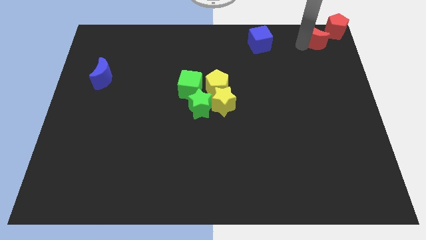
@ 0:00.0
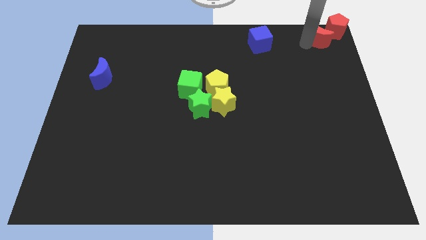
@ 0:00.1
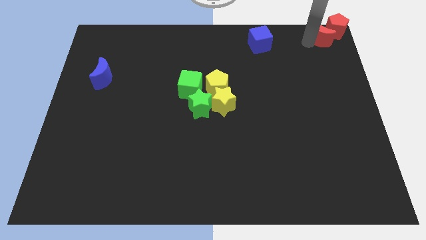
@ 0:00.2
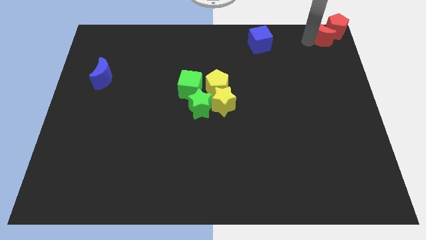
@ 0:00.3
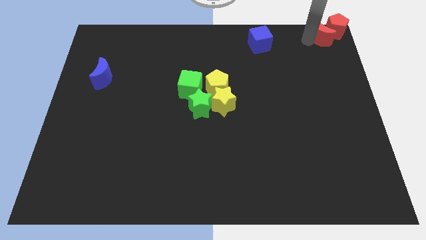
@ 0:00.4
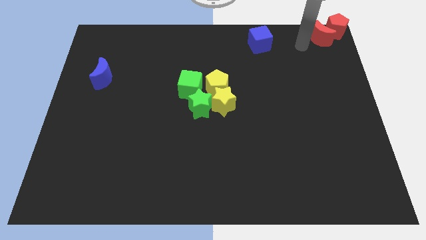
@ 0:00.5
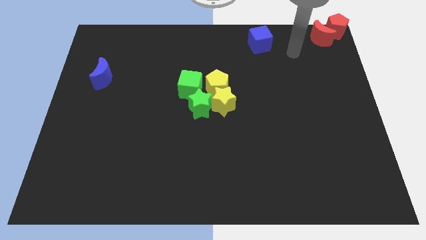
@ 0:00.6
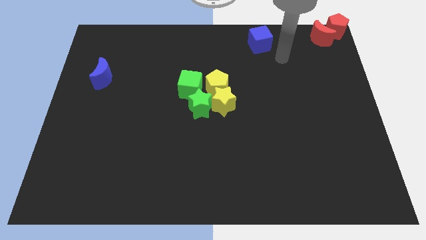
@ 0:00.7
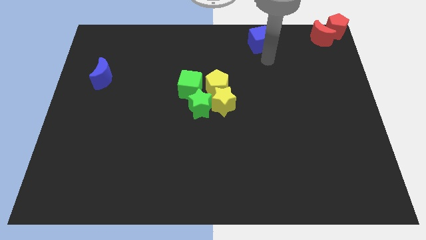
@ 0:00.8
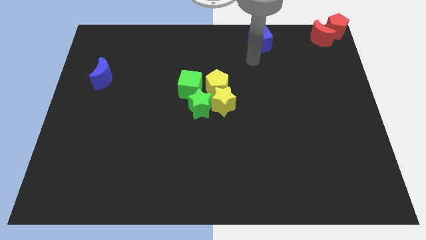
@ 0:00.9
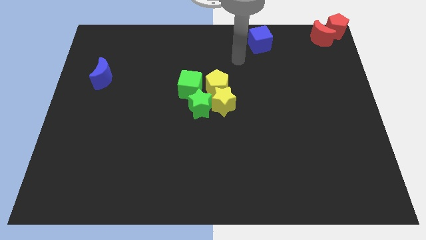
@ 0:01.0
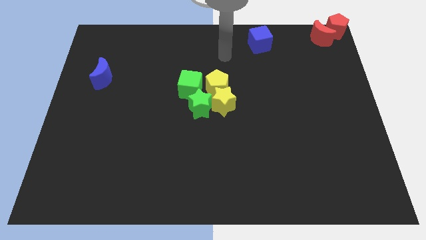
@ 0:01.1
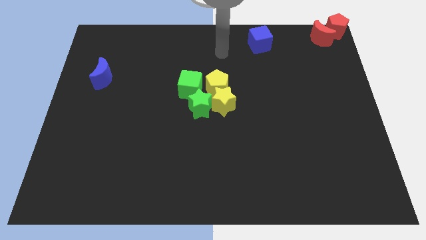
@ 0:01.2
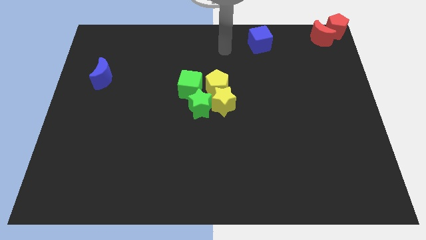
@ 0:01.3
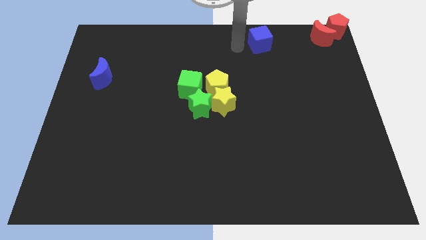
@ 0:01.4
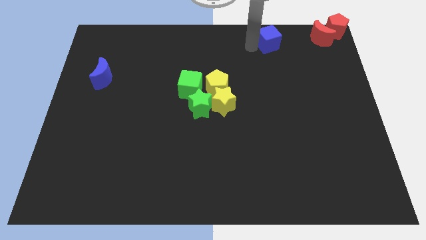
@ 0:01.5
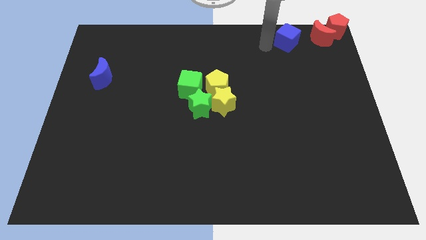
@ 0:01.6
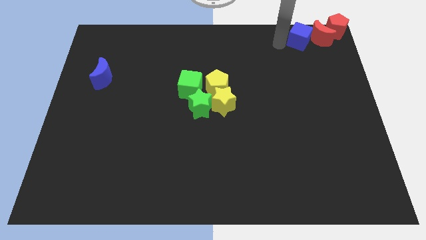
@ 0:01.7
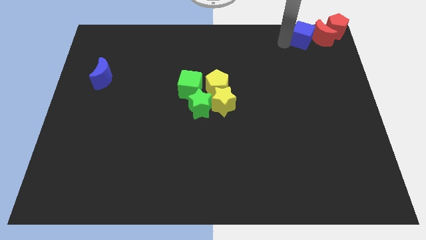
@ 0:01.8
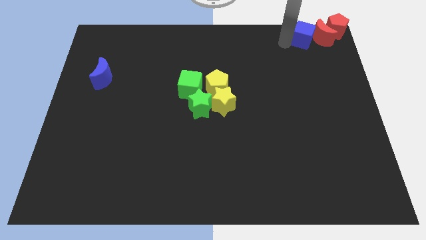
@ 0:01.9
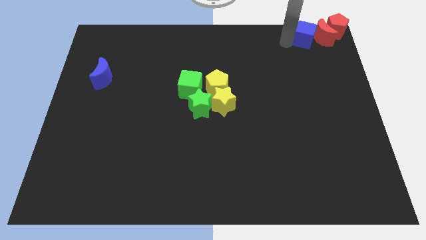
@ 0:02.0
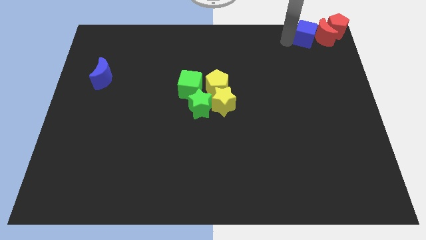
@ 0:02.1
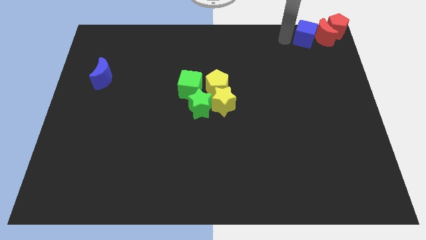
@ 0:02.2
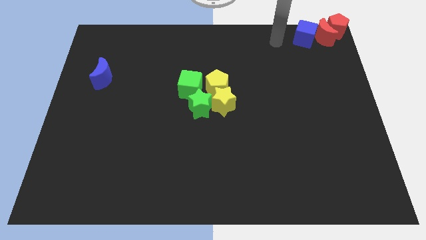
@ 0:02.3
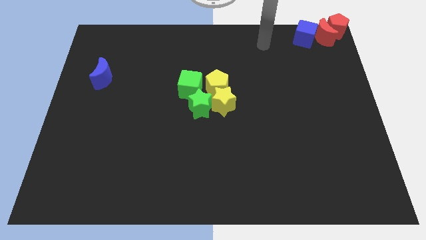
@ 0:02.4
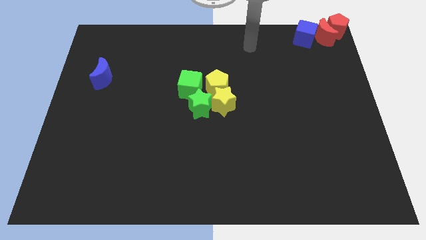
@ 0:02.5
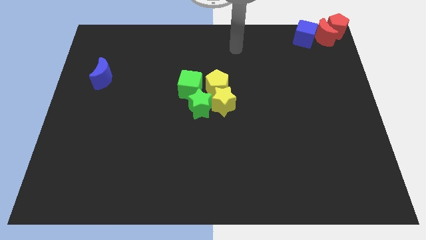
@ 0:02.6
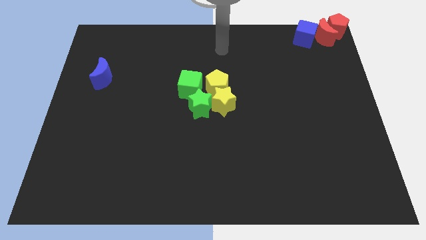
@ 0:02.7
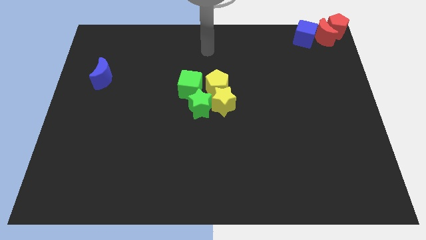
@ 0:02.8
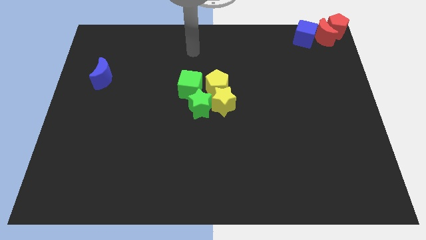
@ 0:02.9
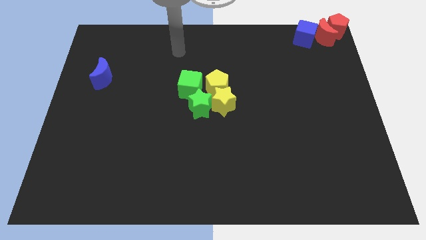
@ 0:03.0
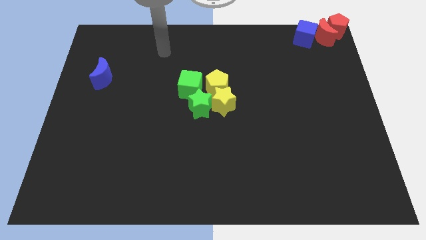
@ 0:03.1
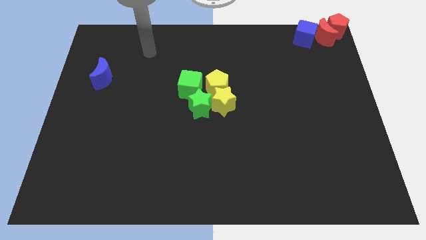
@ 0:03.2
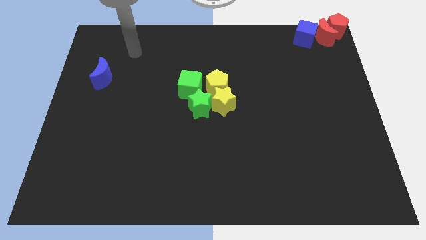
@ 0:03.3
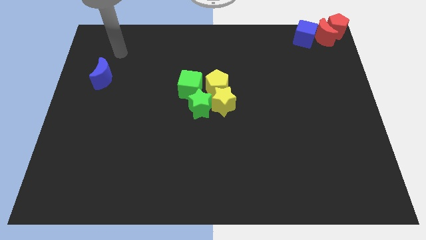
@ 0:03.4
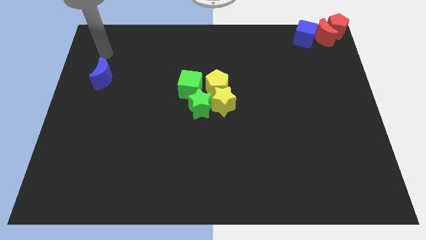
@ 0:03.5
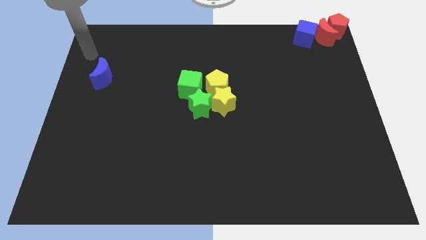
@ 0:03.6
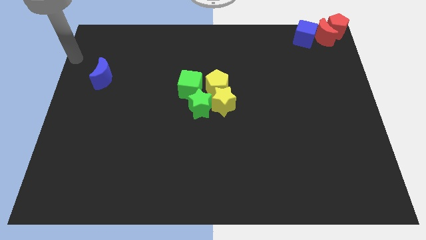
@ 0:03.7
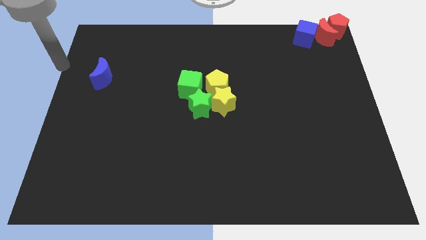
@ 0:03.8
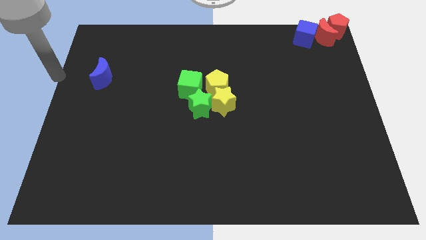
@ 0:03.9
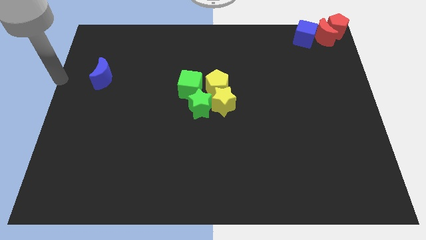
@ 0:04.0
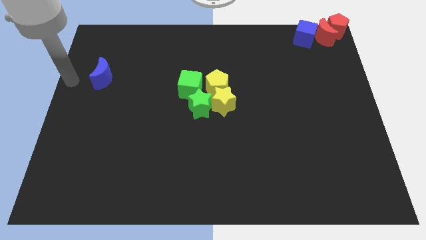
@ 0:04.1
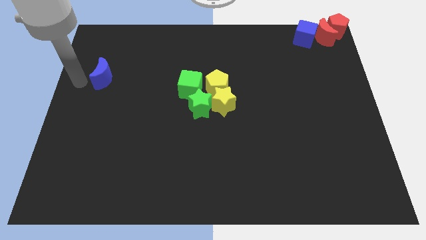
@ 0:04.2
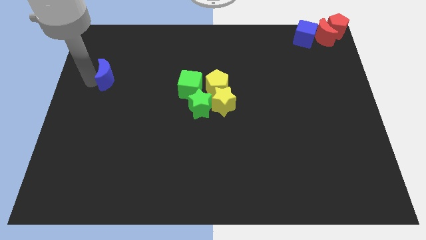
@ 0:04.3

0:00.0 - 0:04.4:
move the blue cube into the red crescent

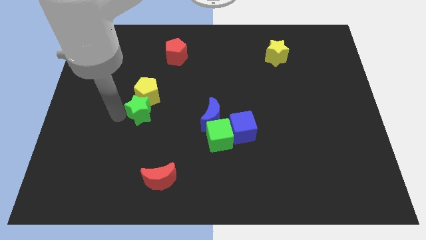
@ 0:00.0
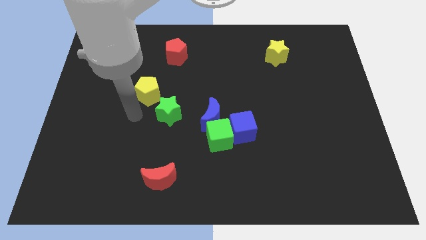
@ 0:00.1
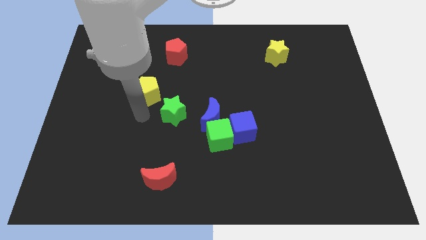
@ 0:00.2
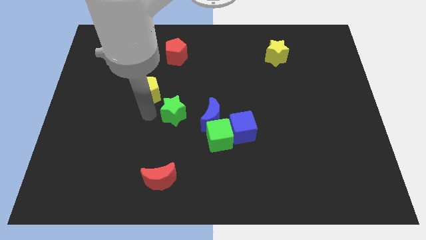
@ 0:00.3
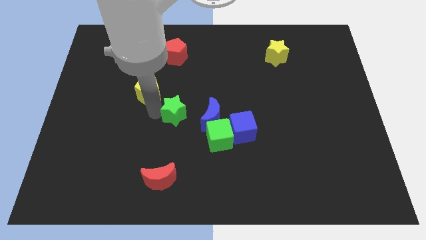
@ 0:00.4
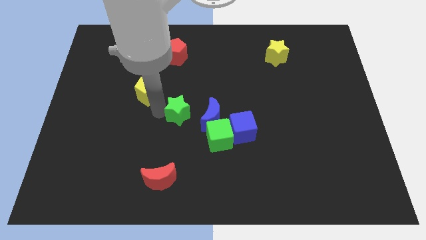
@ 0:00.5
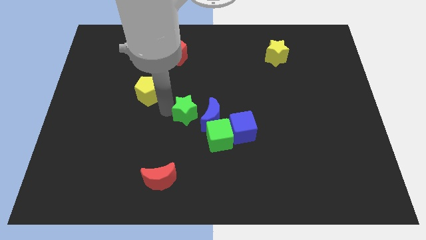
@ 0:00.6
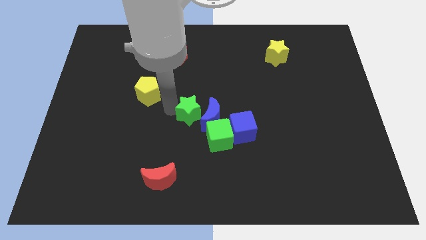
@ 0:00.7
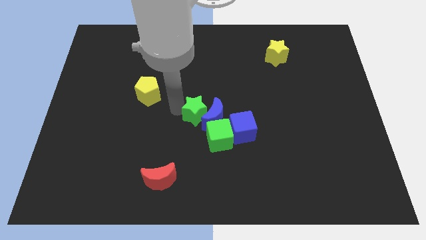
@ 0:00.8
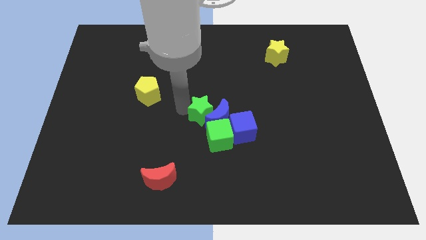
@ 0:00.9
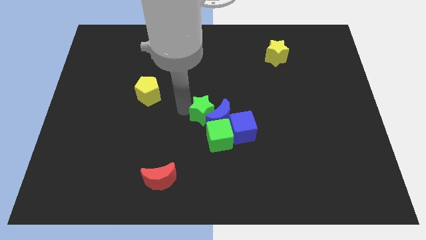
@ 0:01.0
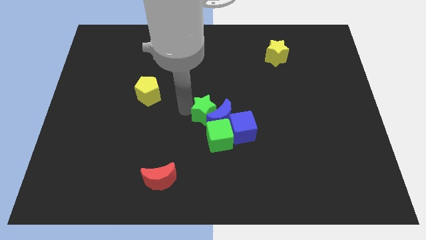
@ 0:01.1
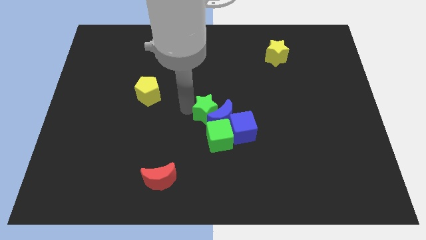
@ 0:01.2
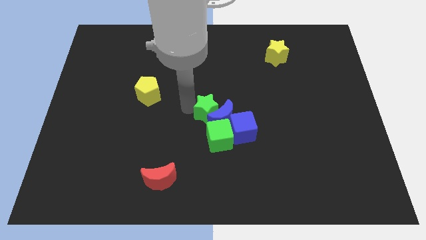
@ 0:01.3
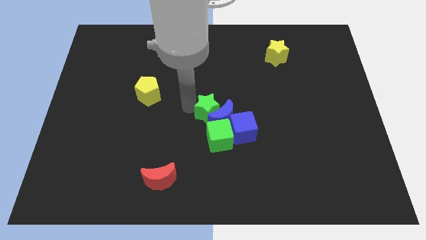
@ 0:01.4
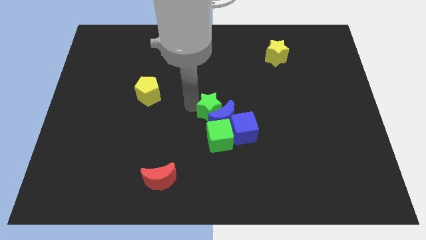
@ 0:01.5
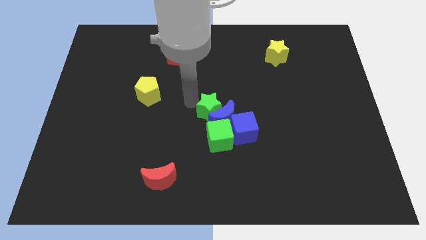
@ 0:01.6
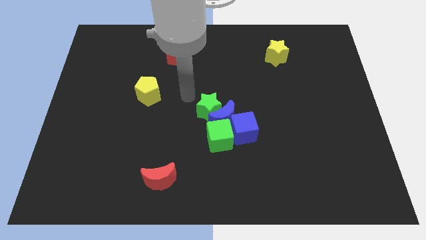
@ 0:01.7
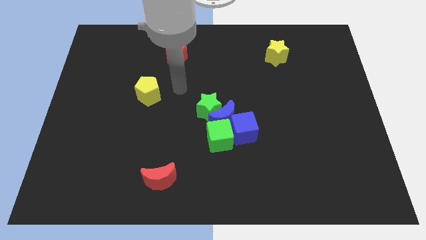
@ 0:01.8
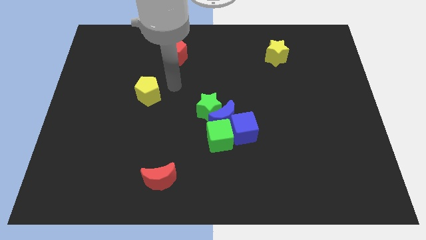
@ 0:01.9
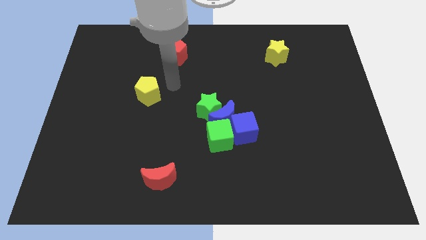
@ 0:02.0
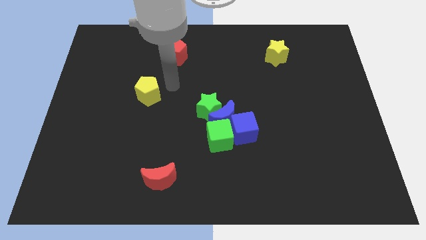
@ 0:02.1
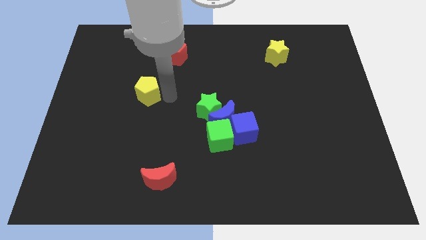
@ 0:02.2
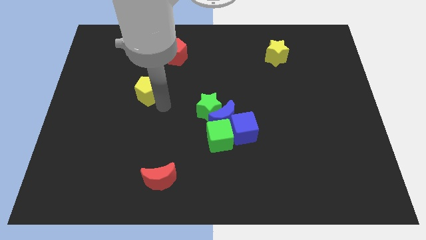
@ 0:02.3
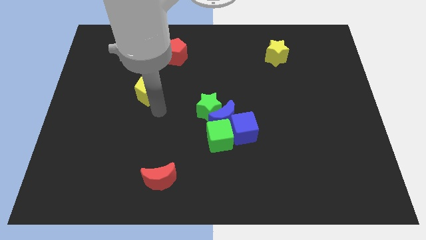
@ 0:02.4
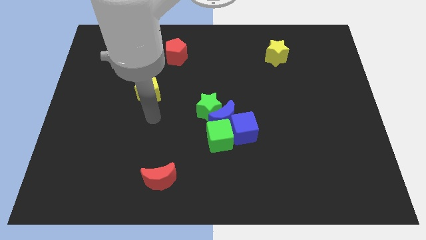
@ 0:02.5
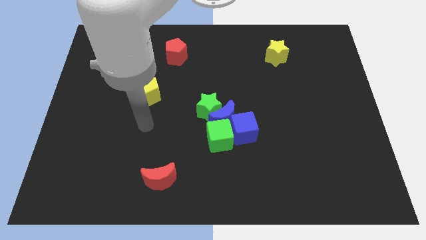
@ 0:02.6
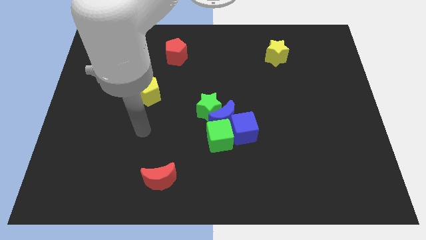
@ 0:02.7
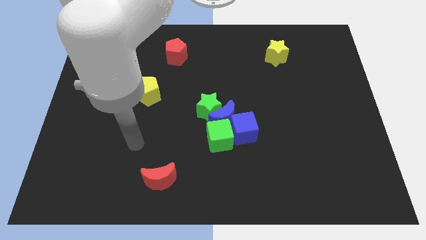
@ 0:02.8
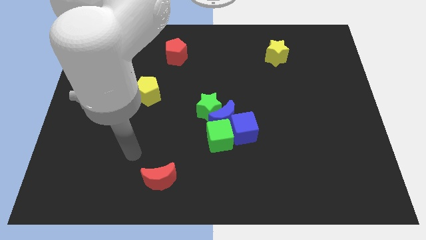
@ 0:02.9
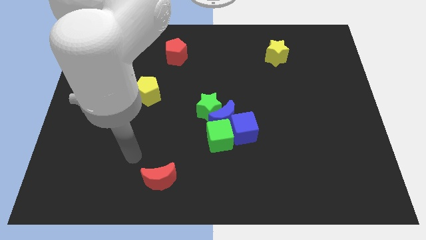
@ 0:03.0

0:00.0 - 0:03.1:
push the green star into the group of blocks

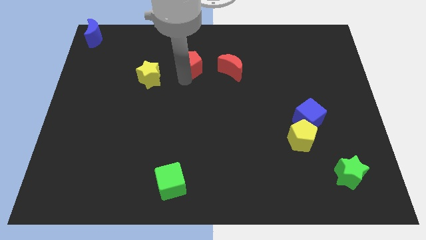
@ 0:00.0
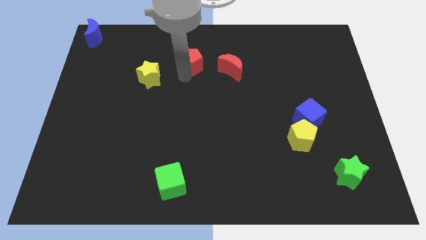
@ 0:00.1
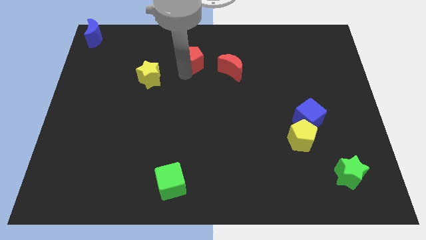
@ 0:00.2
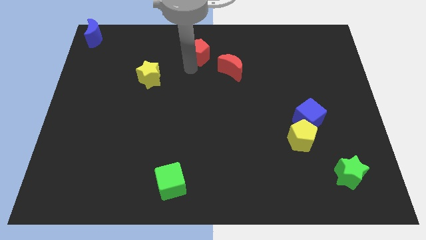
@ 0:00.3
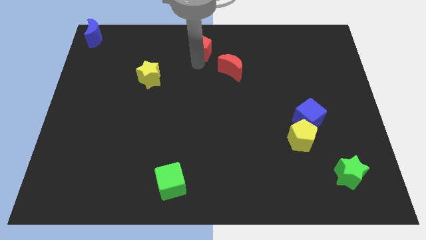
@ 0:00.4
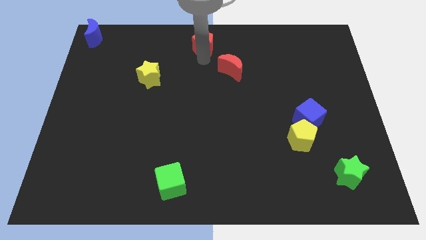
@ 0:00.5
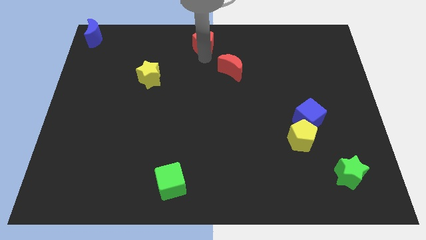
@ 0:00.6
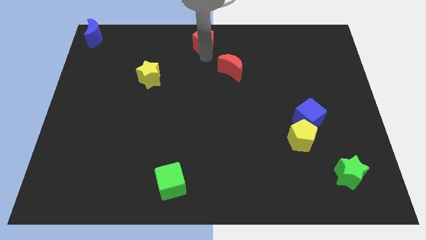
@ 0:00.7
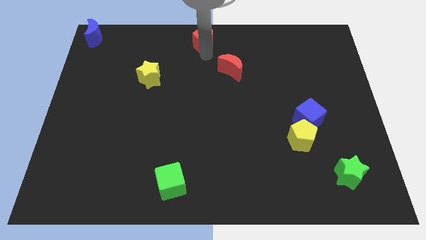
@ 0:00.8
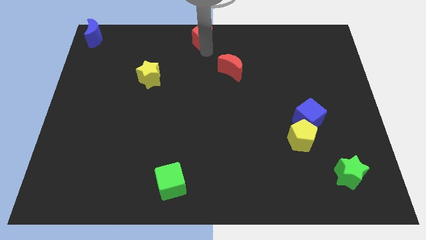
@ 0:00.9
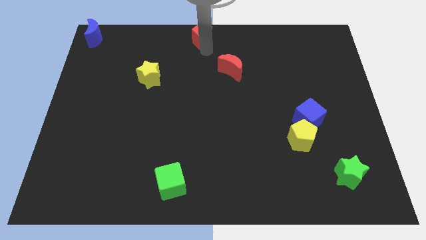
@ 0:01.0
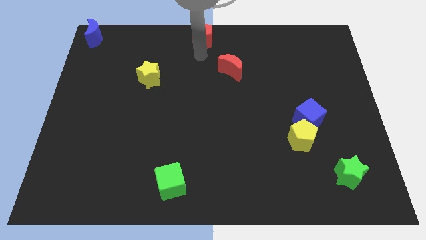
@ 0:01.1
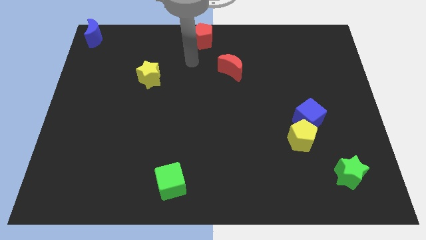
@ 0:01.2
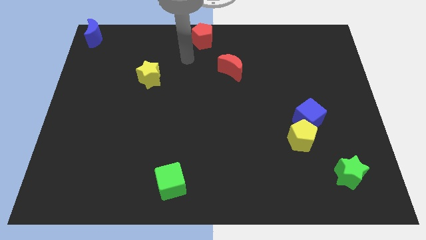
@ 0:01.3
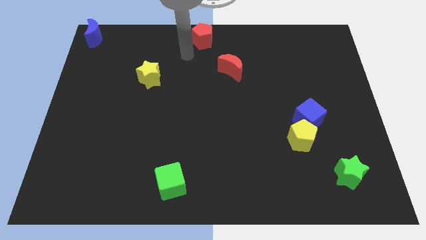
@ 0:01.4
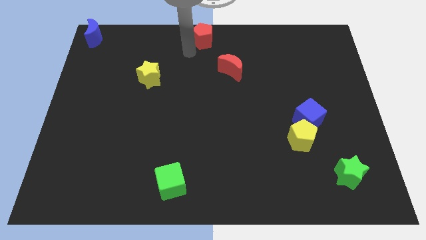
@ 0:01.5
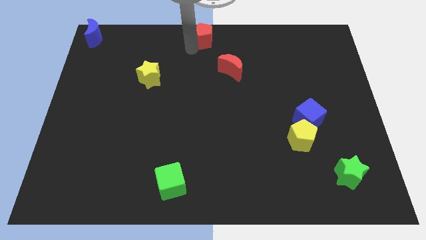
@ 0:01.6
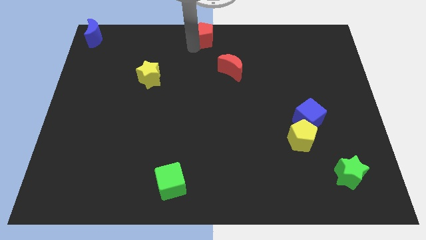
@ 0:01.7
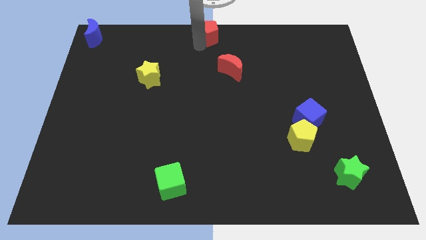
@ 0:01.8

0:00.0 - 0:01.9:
move the red pentagon to the top center of the board
